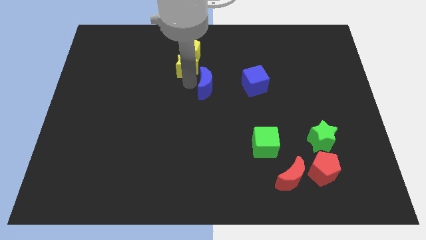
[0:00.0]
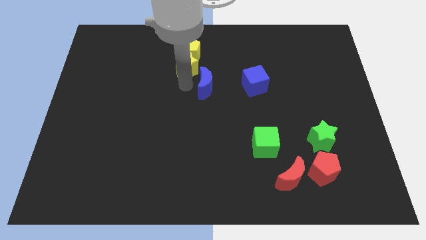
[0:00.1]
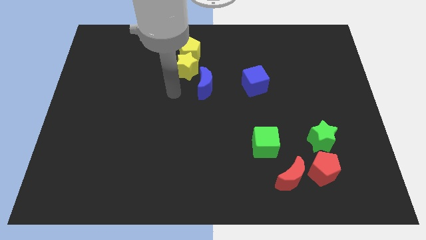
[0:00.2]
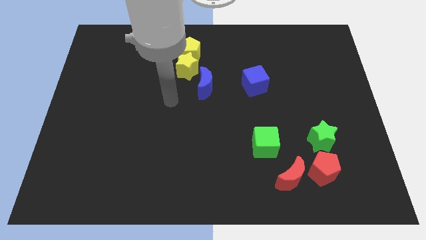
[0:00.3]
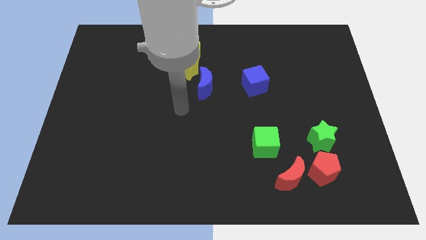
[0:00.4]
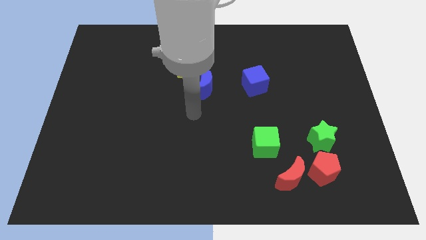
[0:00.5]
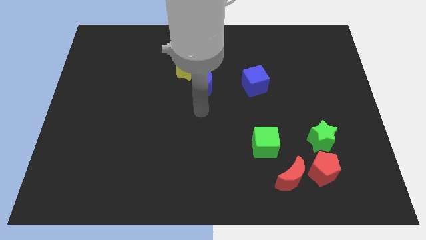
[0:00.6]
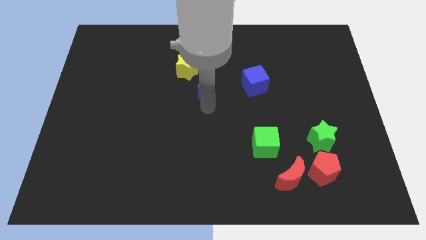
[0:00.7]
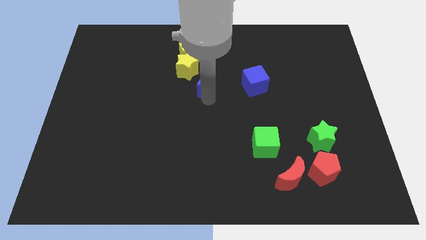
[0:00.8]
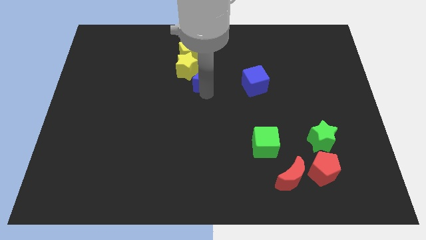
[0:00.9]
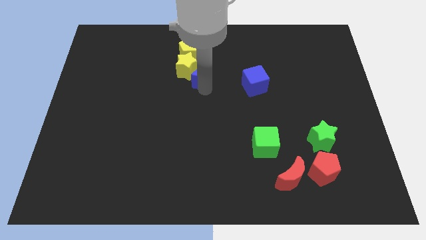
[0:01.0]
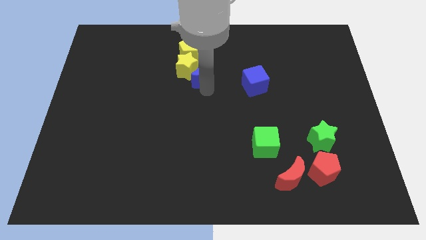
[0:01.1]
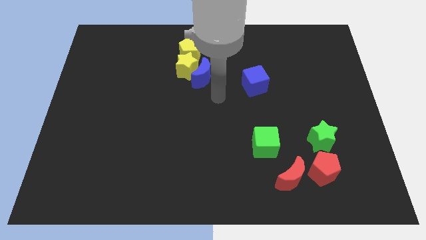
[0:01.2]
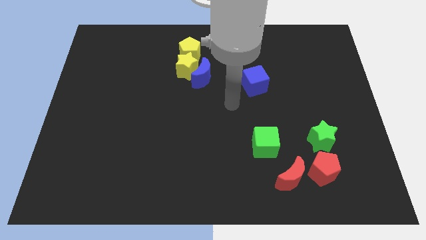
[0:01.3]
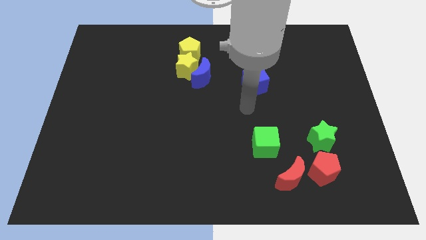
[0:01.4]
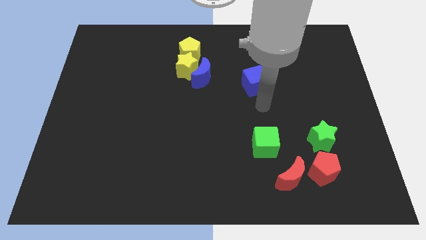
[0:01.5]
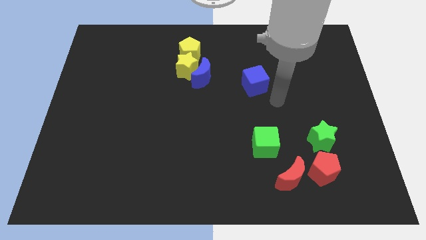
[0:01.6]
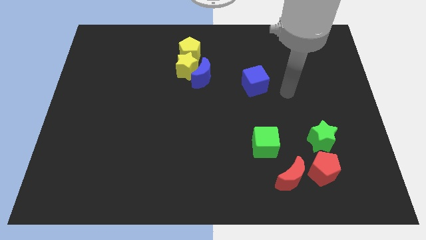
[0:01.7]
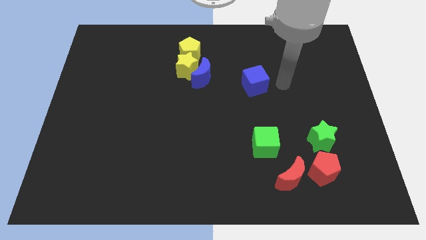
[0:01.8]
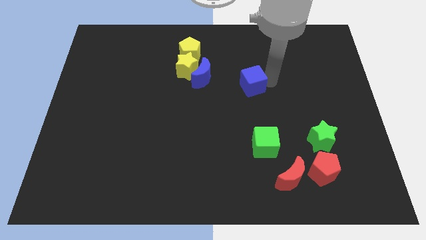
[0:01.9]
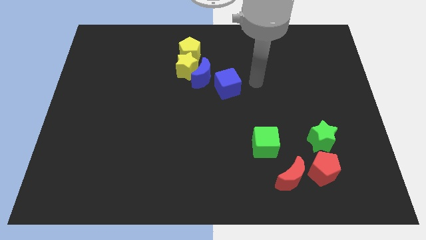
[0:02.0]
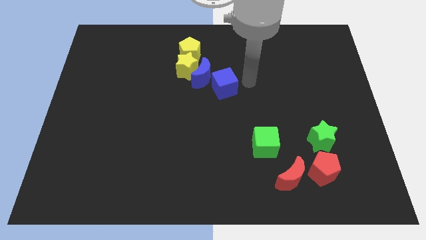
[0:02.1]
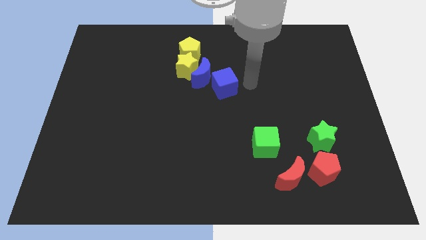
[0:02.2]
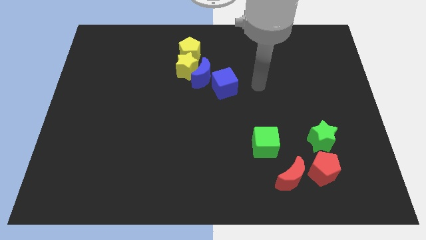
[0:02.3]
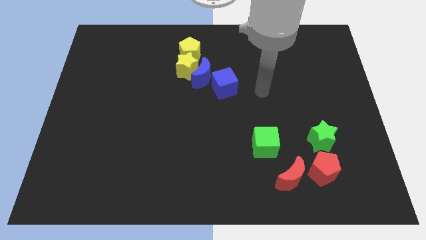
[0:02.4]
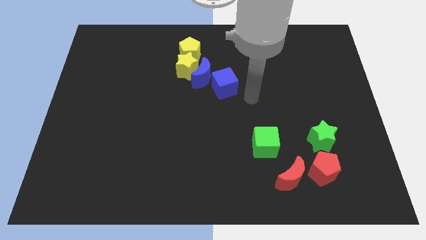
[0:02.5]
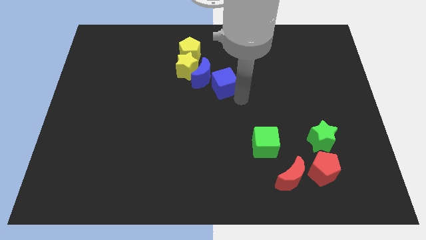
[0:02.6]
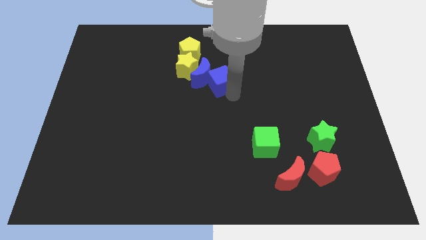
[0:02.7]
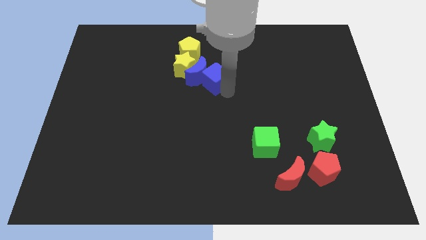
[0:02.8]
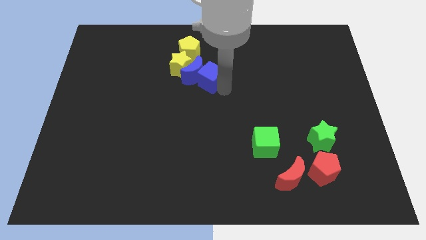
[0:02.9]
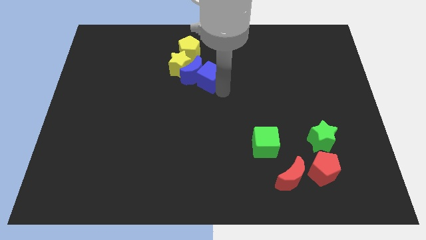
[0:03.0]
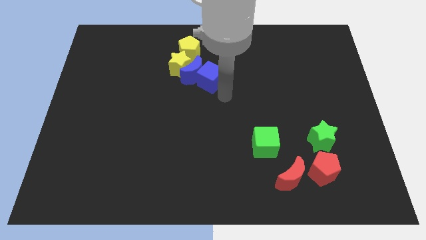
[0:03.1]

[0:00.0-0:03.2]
push the blue blocks into the yellow star

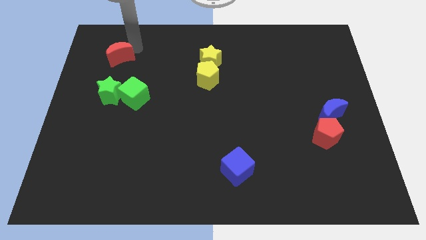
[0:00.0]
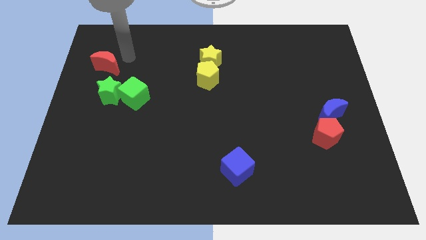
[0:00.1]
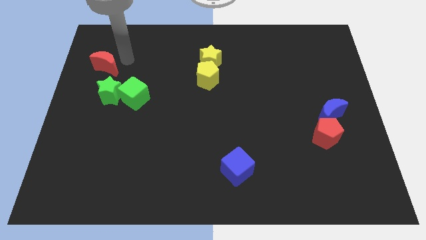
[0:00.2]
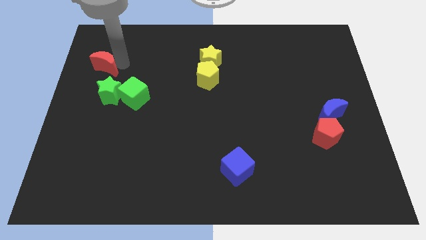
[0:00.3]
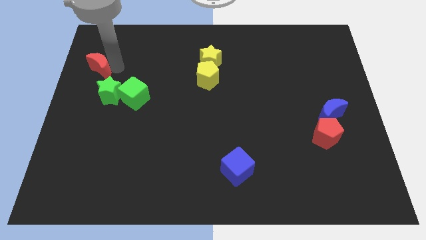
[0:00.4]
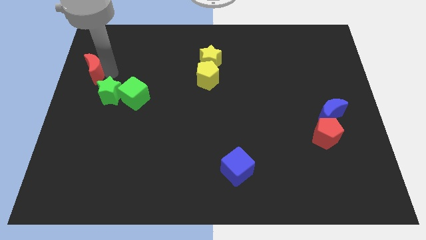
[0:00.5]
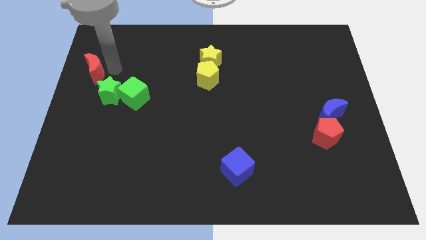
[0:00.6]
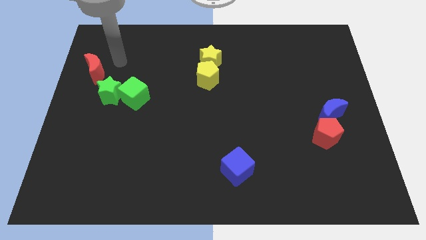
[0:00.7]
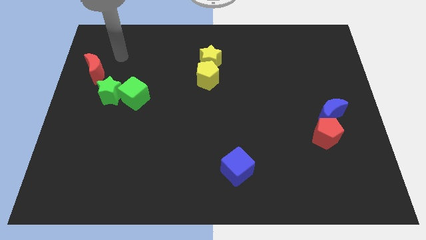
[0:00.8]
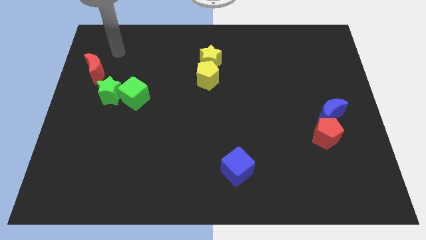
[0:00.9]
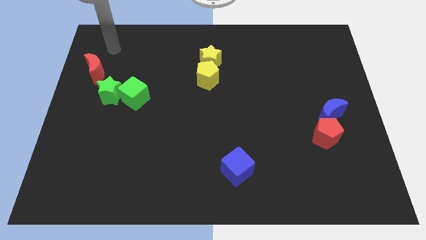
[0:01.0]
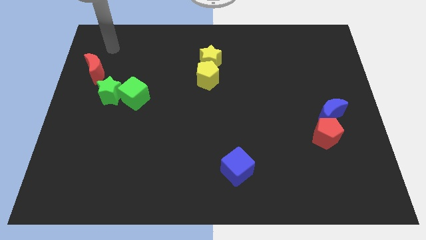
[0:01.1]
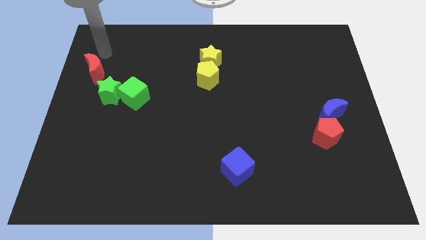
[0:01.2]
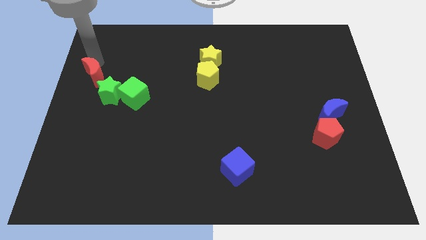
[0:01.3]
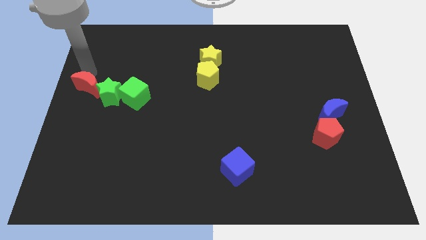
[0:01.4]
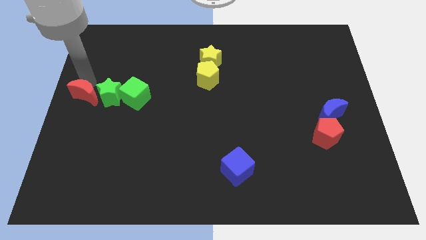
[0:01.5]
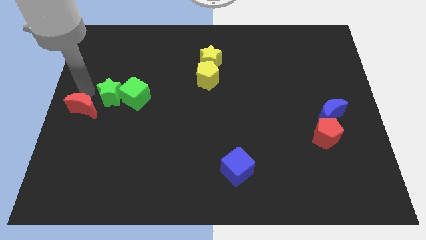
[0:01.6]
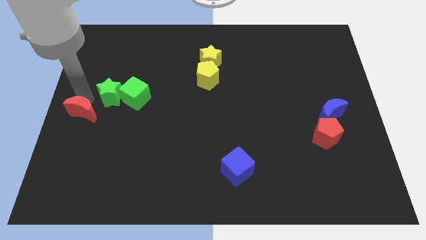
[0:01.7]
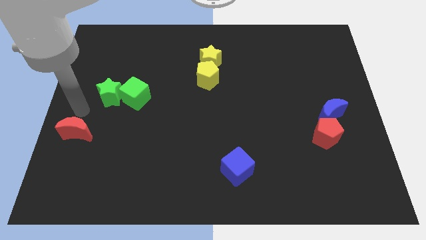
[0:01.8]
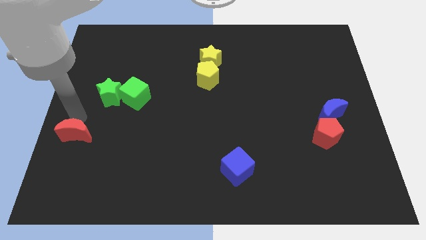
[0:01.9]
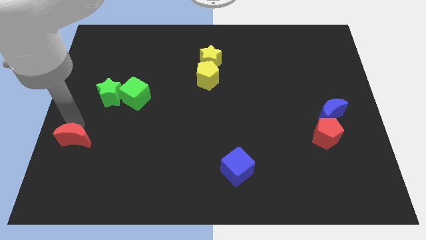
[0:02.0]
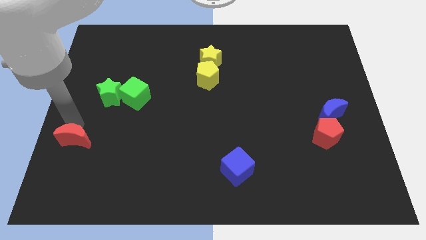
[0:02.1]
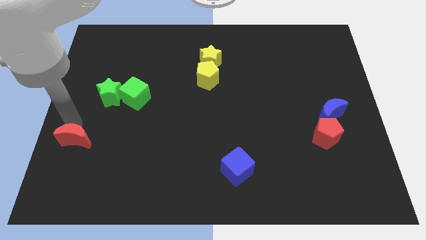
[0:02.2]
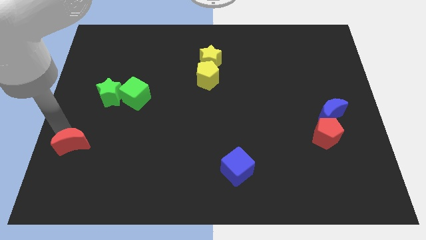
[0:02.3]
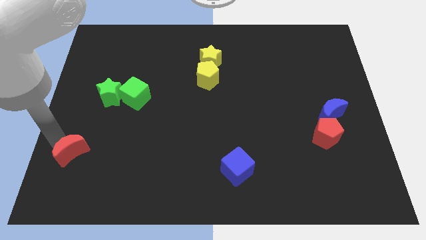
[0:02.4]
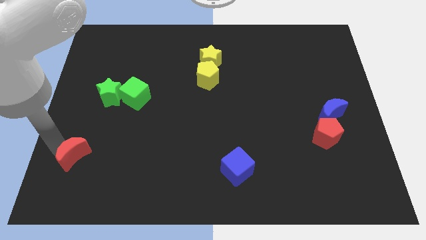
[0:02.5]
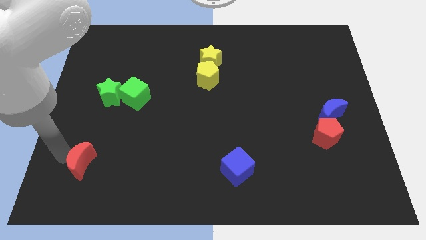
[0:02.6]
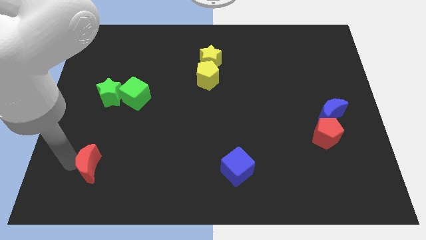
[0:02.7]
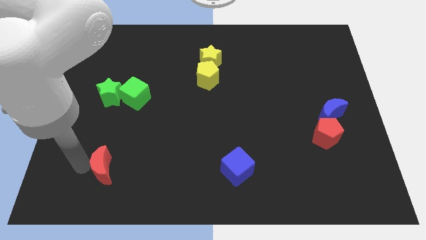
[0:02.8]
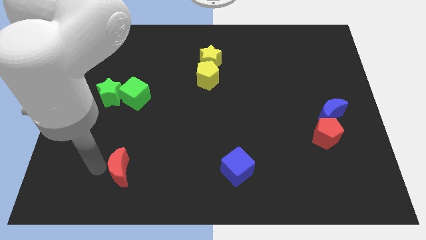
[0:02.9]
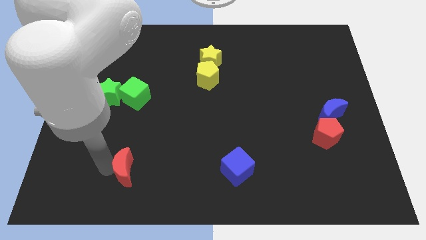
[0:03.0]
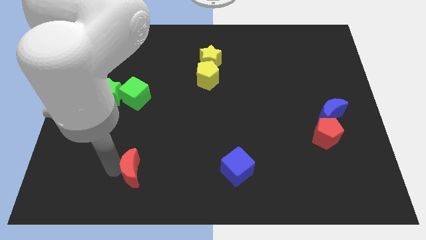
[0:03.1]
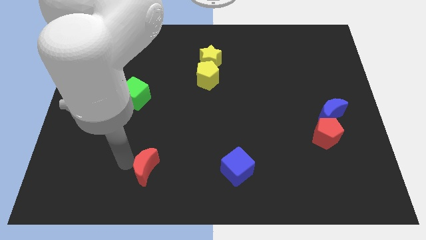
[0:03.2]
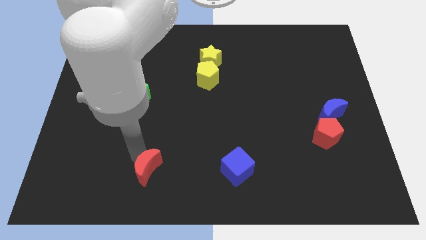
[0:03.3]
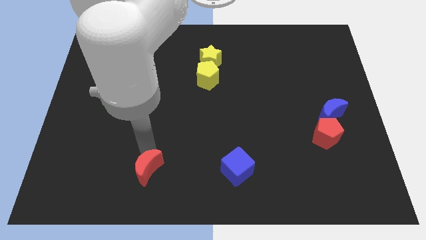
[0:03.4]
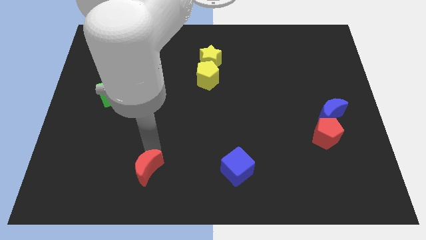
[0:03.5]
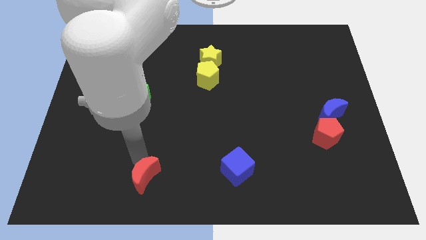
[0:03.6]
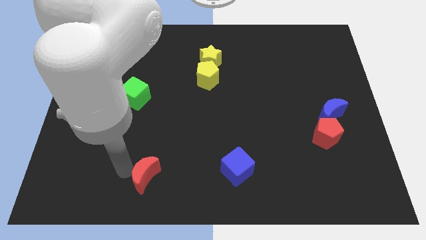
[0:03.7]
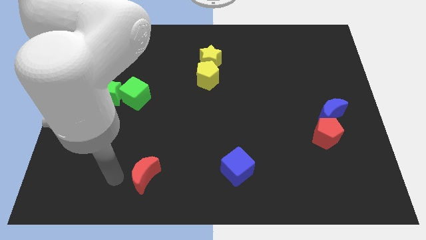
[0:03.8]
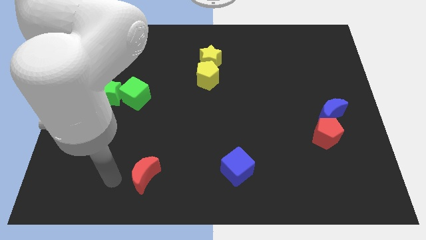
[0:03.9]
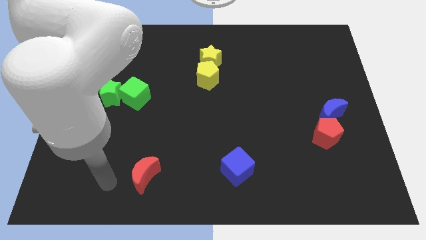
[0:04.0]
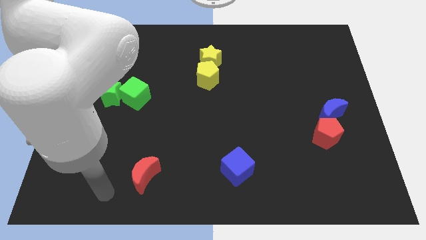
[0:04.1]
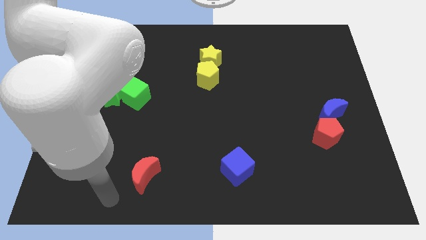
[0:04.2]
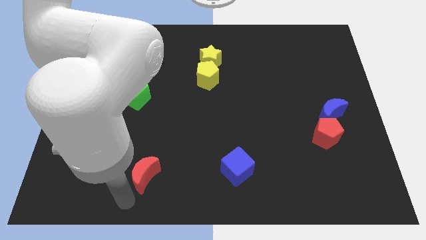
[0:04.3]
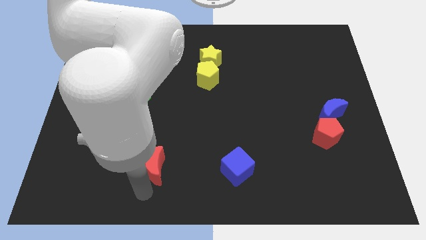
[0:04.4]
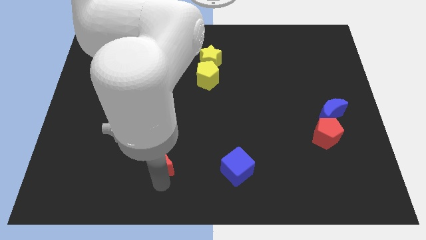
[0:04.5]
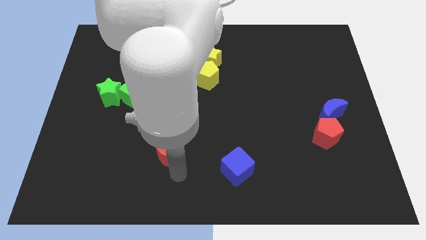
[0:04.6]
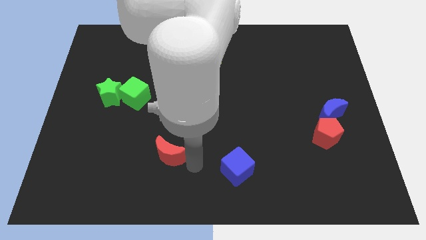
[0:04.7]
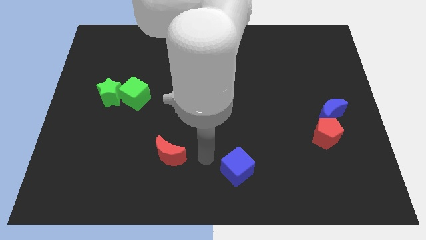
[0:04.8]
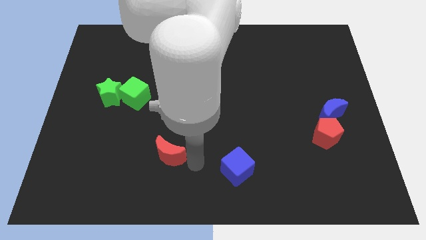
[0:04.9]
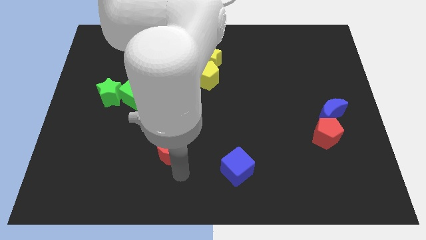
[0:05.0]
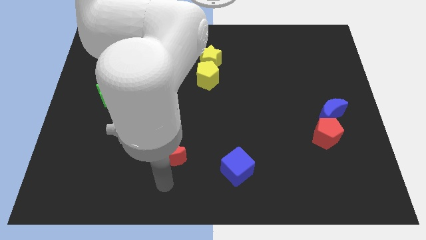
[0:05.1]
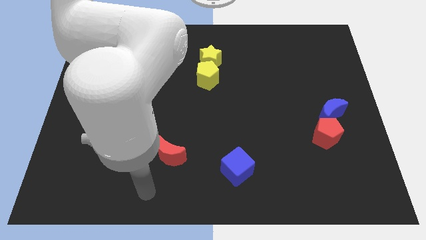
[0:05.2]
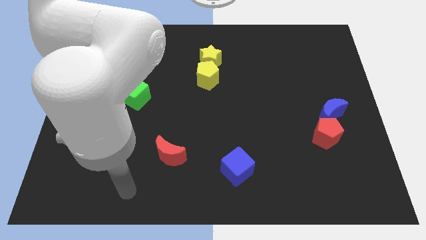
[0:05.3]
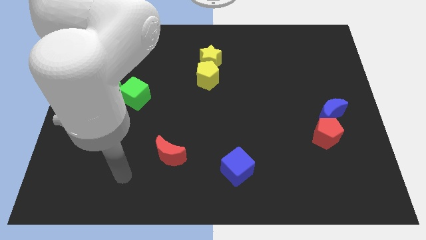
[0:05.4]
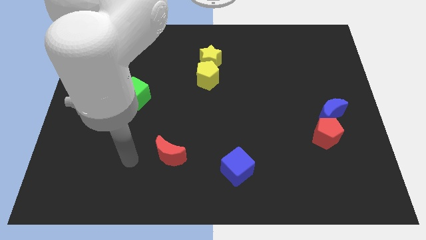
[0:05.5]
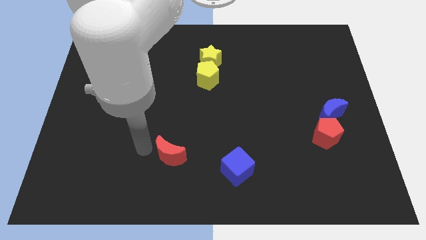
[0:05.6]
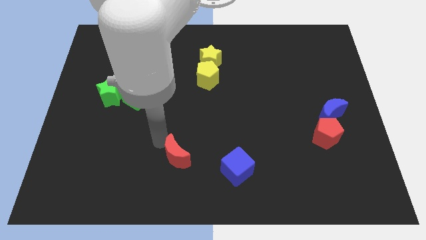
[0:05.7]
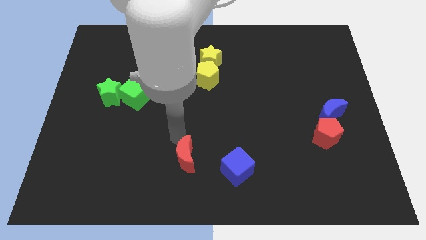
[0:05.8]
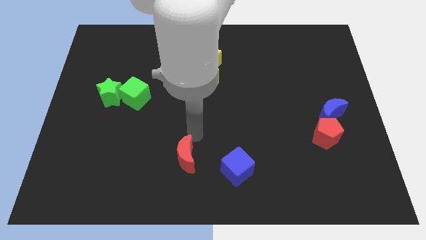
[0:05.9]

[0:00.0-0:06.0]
push the red crescent down towards the blue cube
